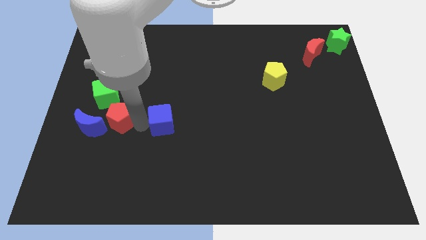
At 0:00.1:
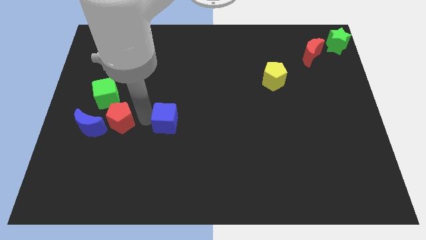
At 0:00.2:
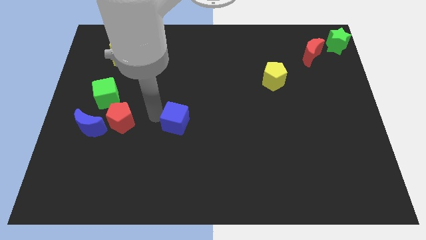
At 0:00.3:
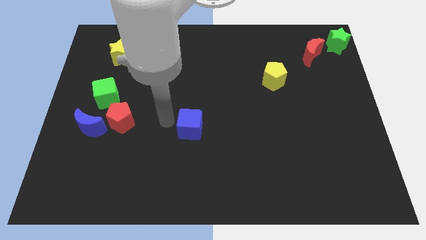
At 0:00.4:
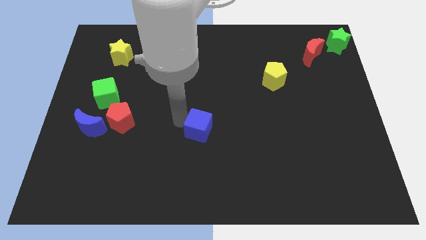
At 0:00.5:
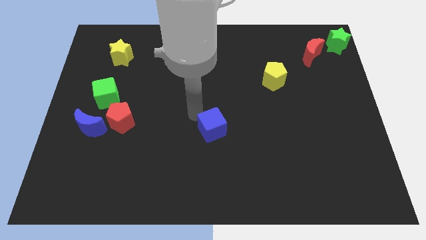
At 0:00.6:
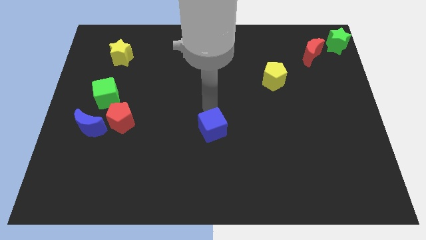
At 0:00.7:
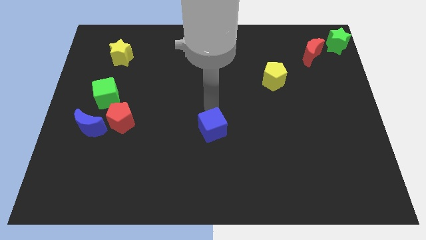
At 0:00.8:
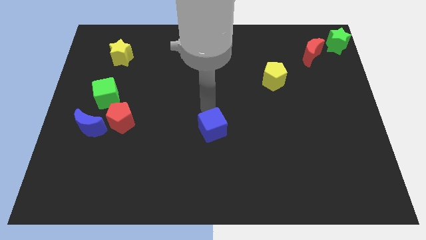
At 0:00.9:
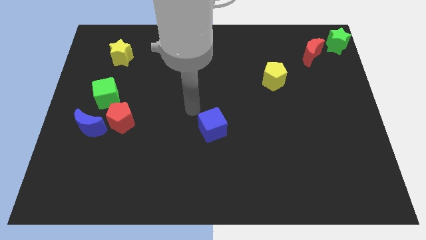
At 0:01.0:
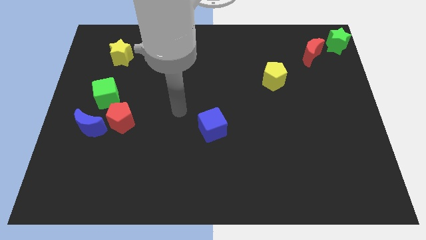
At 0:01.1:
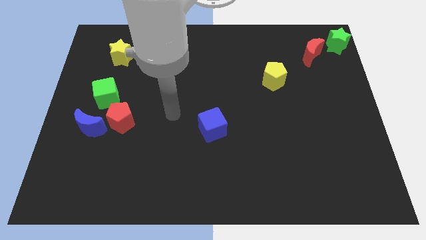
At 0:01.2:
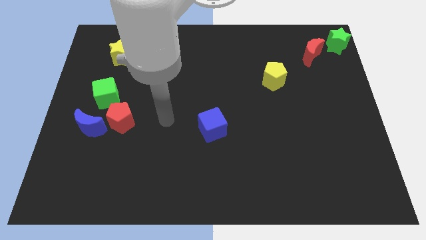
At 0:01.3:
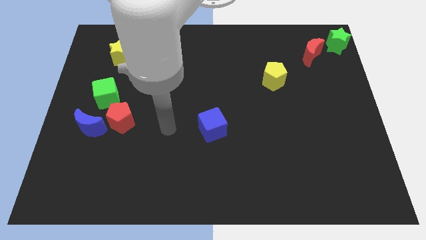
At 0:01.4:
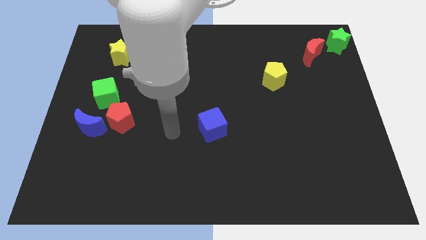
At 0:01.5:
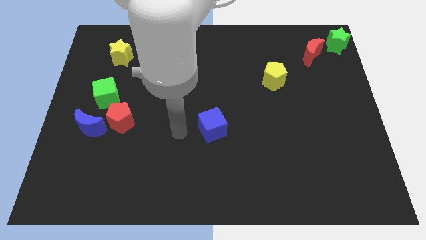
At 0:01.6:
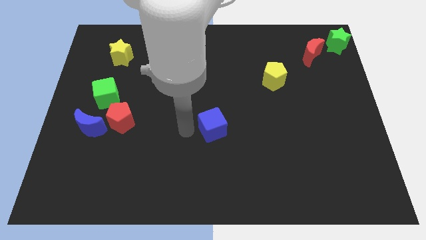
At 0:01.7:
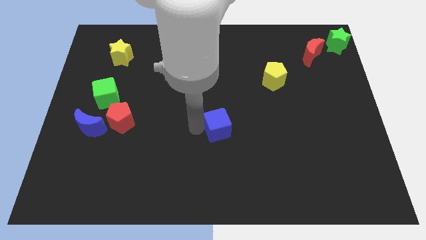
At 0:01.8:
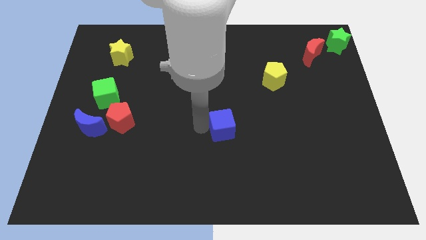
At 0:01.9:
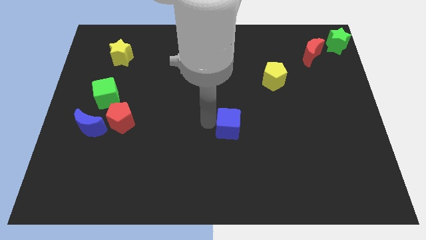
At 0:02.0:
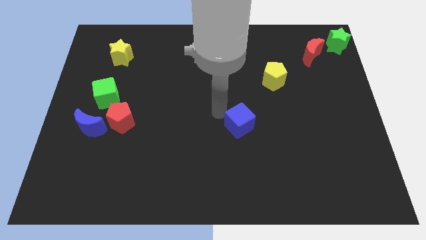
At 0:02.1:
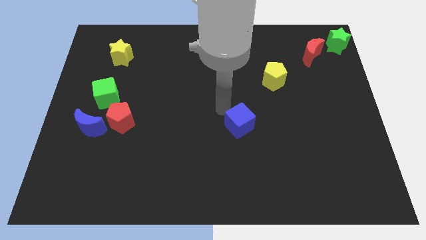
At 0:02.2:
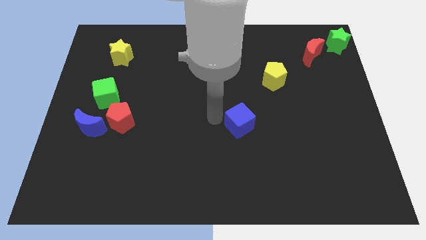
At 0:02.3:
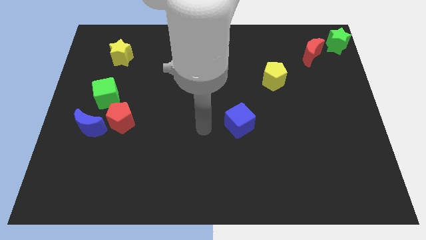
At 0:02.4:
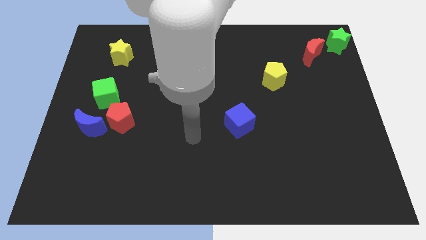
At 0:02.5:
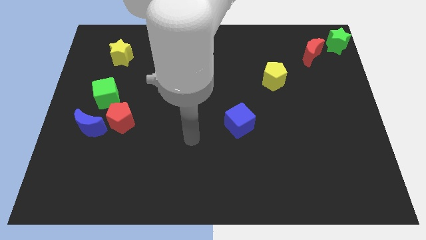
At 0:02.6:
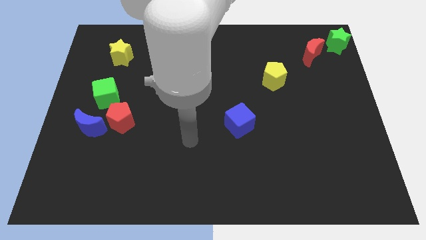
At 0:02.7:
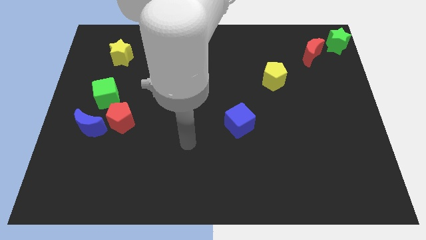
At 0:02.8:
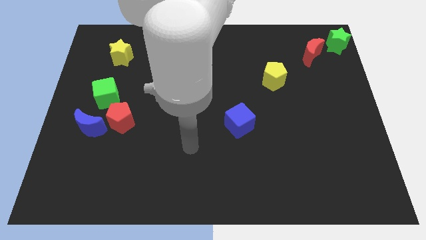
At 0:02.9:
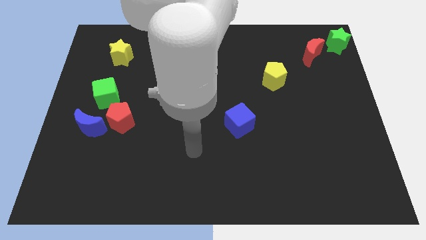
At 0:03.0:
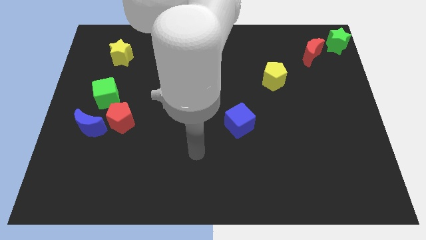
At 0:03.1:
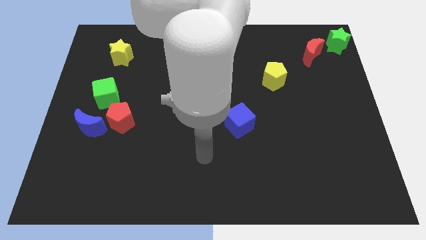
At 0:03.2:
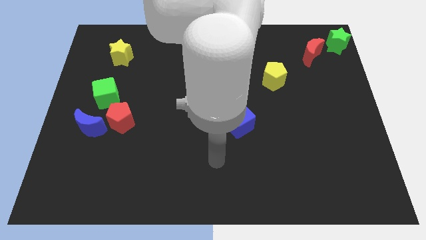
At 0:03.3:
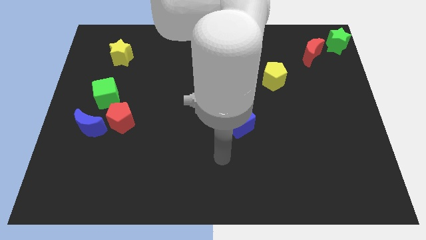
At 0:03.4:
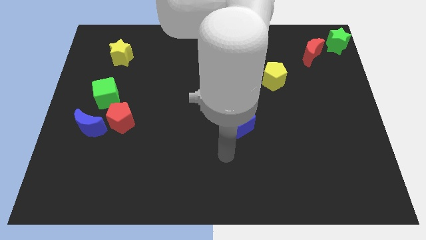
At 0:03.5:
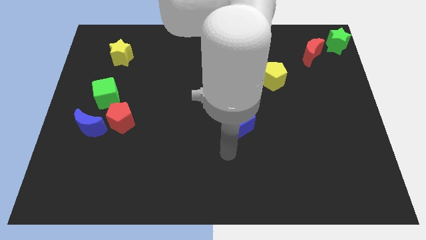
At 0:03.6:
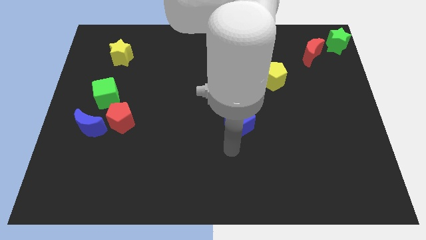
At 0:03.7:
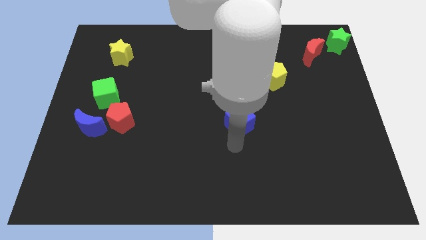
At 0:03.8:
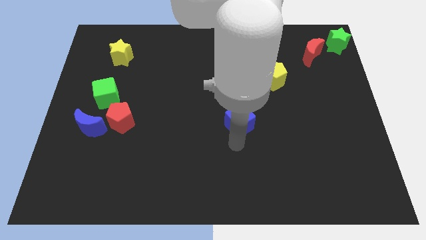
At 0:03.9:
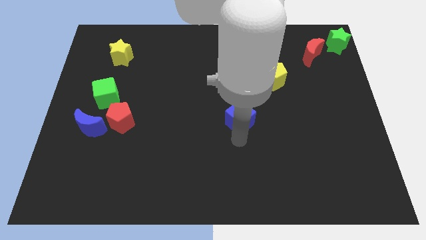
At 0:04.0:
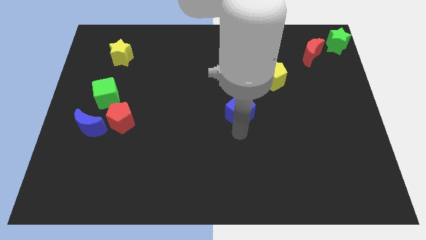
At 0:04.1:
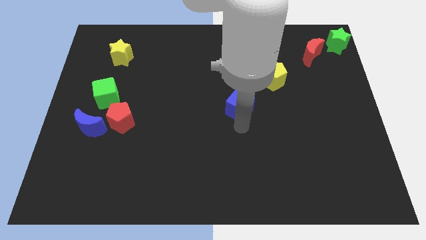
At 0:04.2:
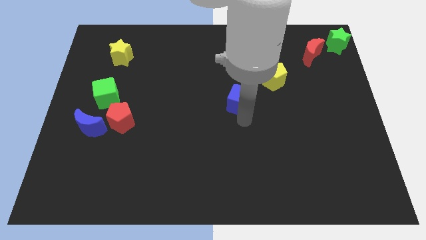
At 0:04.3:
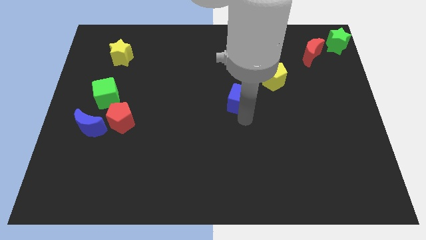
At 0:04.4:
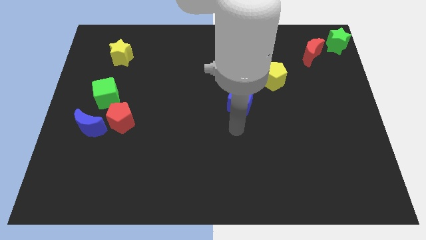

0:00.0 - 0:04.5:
put the blue cube at the center of the board

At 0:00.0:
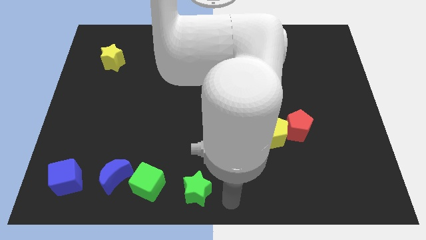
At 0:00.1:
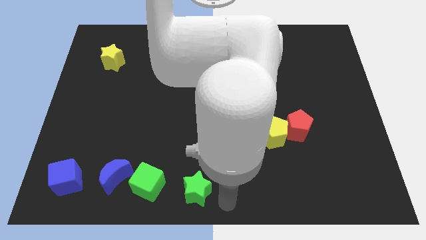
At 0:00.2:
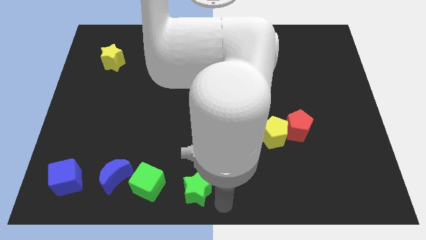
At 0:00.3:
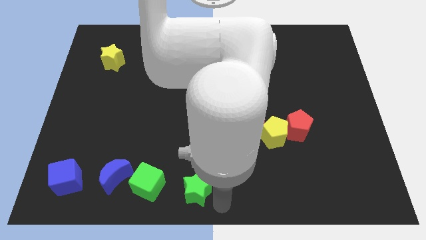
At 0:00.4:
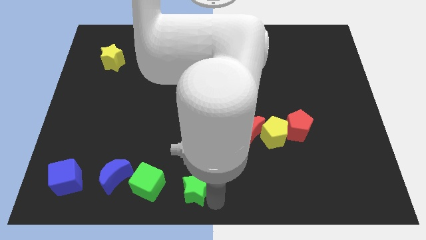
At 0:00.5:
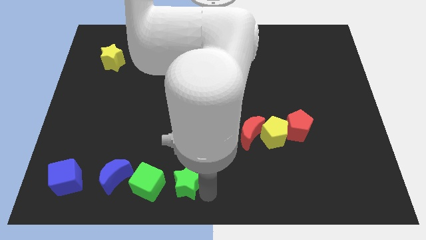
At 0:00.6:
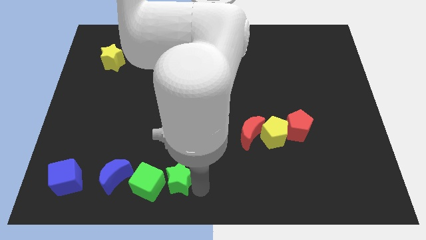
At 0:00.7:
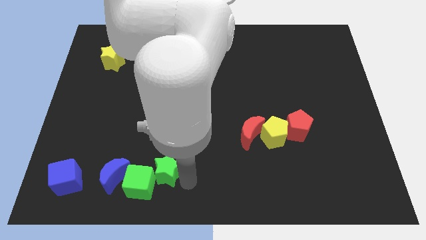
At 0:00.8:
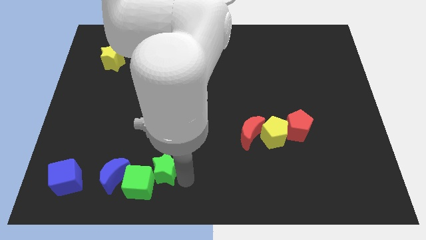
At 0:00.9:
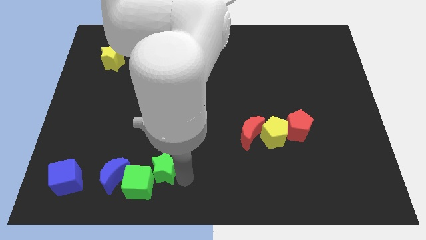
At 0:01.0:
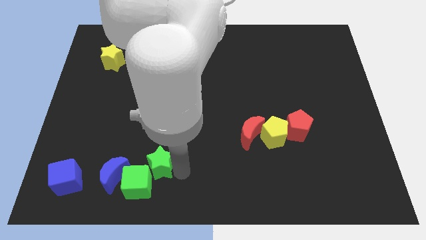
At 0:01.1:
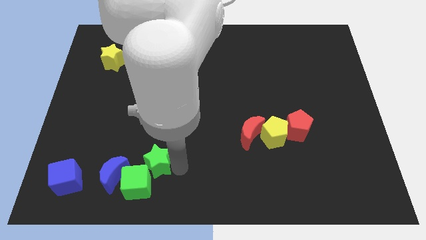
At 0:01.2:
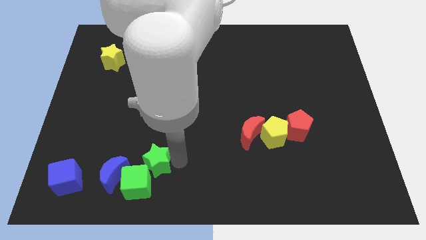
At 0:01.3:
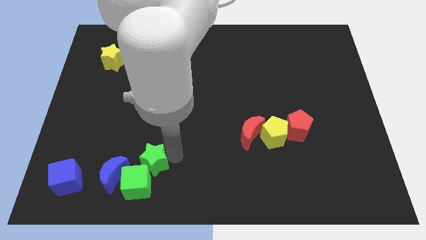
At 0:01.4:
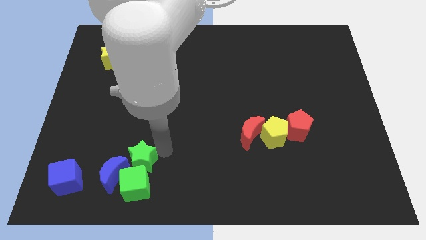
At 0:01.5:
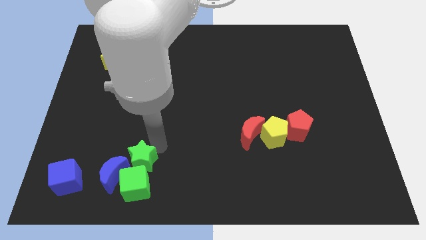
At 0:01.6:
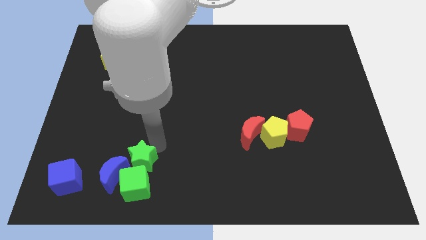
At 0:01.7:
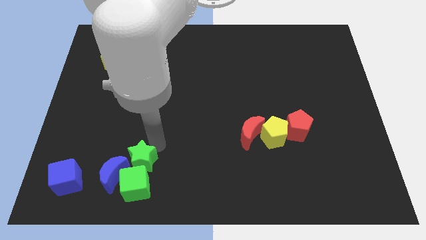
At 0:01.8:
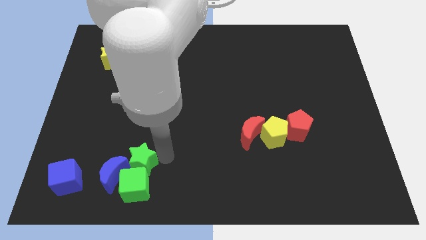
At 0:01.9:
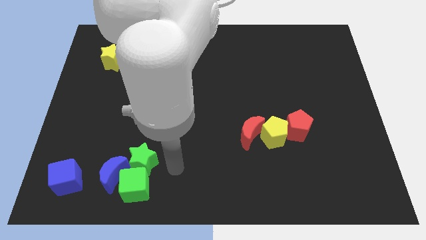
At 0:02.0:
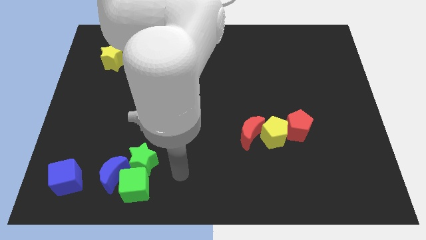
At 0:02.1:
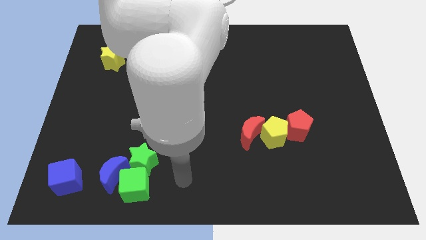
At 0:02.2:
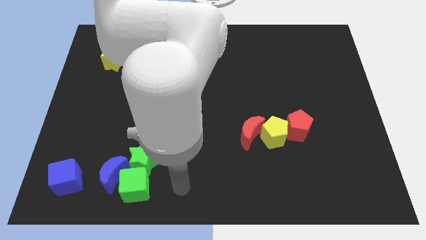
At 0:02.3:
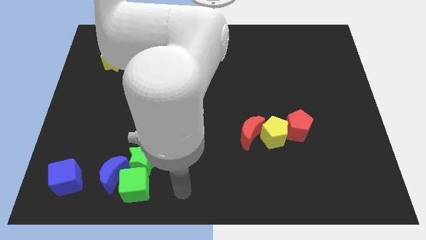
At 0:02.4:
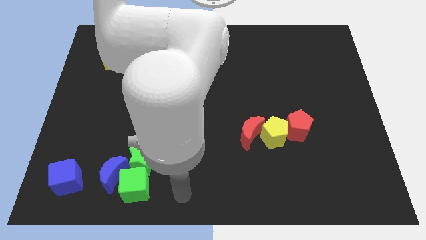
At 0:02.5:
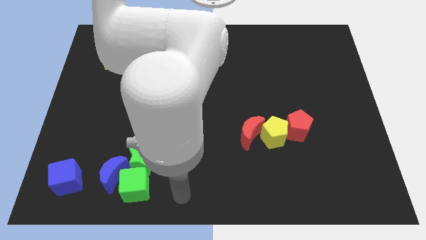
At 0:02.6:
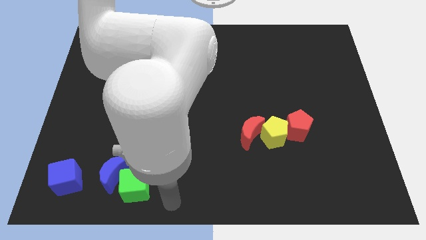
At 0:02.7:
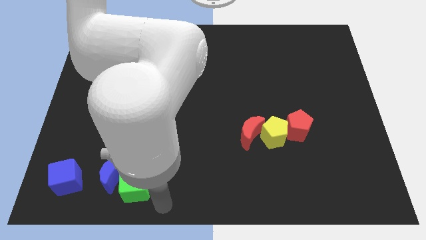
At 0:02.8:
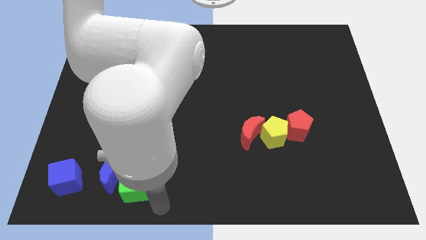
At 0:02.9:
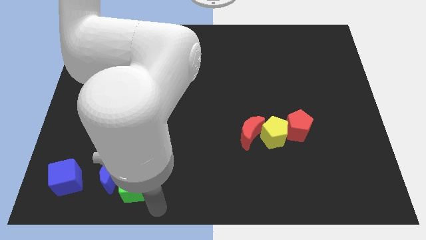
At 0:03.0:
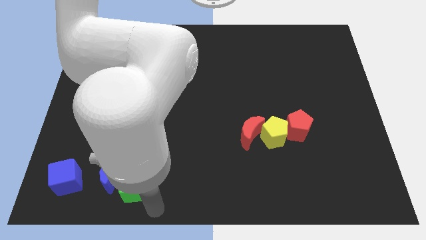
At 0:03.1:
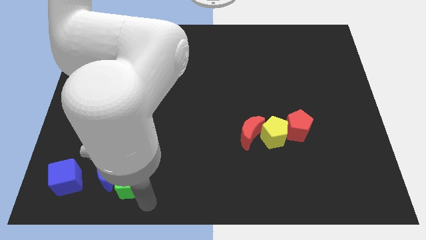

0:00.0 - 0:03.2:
arrange the green star on the top of the green cube

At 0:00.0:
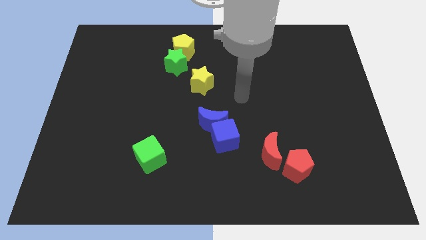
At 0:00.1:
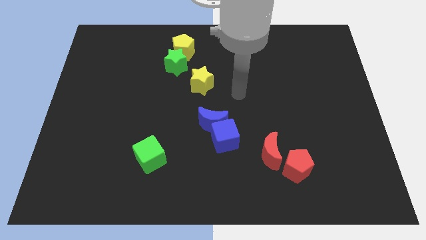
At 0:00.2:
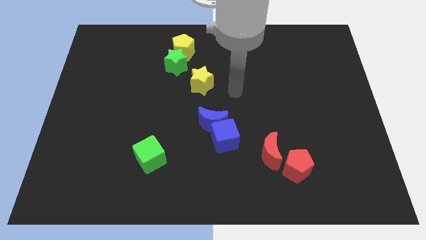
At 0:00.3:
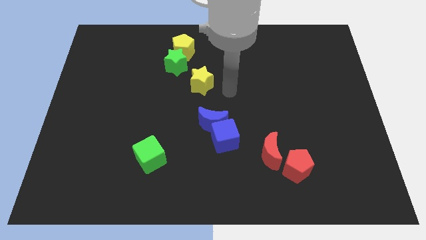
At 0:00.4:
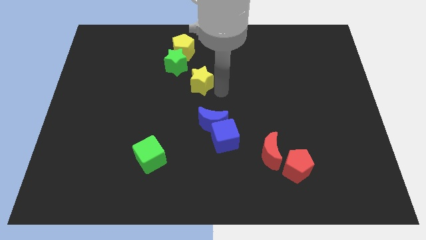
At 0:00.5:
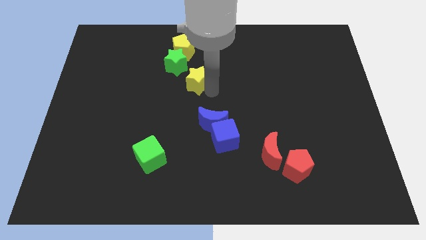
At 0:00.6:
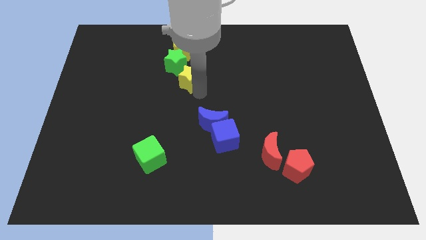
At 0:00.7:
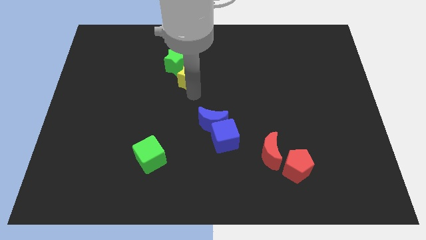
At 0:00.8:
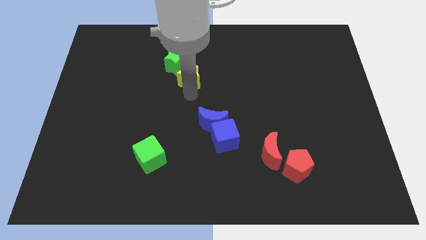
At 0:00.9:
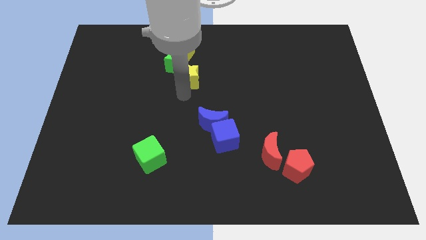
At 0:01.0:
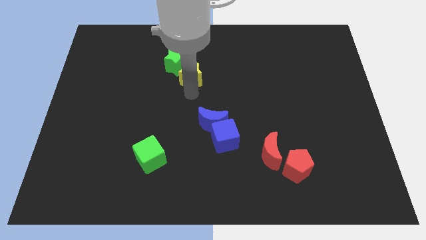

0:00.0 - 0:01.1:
slide yellow star to the bottom right of the green star
